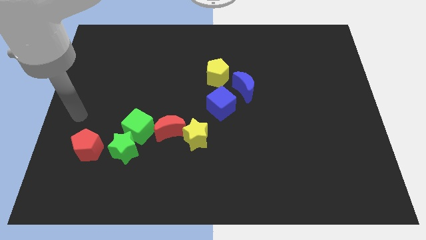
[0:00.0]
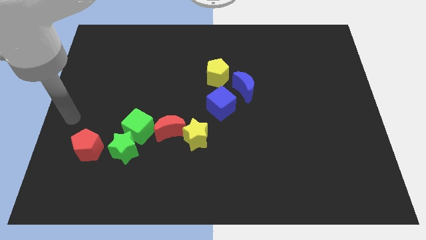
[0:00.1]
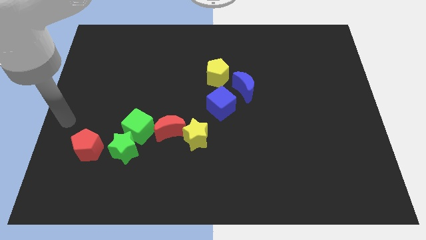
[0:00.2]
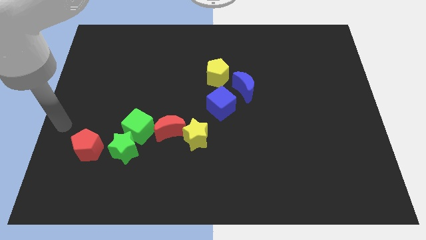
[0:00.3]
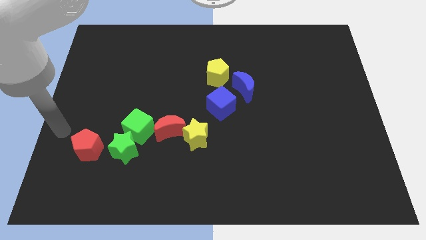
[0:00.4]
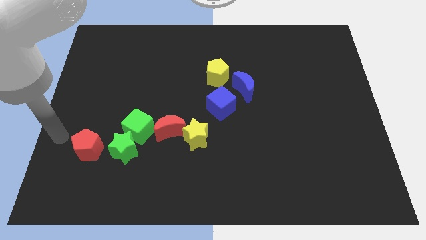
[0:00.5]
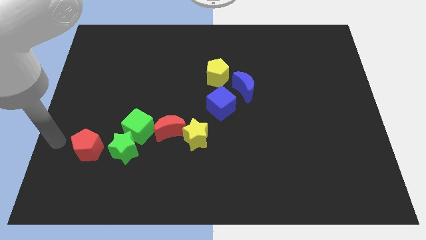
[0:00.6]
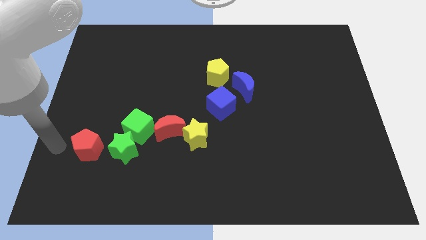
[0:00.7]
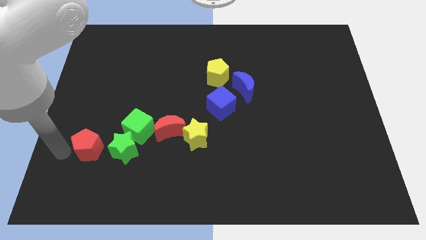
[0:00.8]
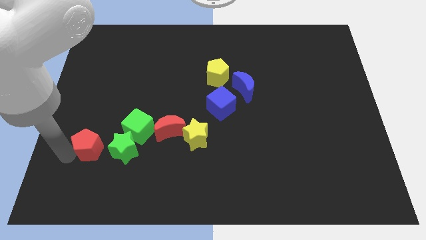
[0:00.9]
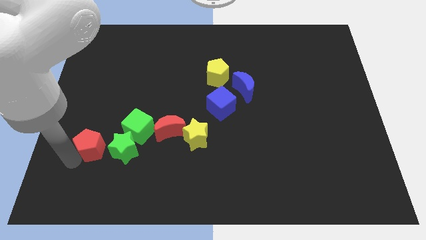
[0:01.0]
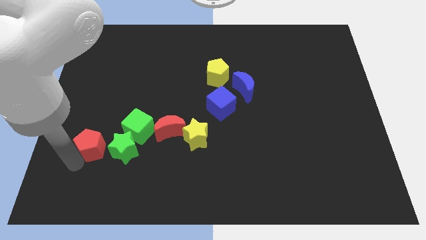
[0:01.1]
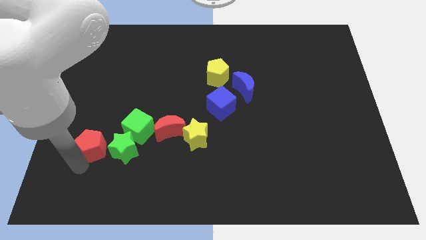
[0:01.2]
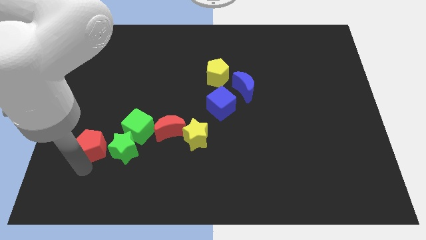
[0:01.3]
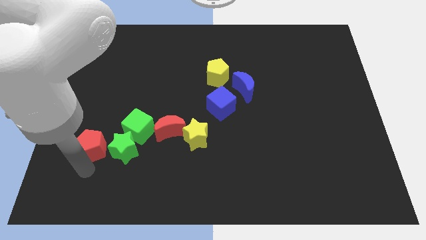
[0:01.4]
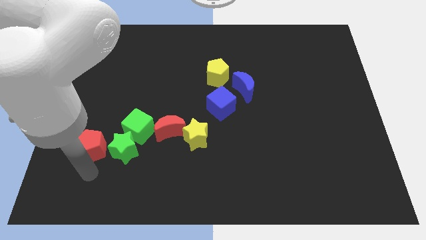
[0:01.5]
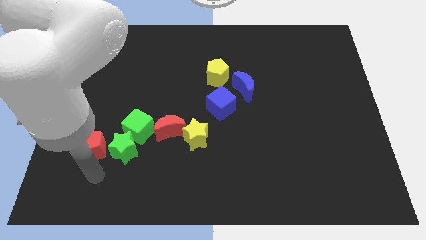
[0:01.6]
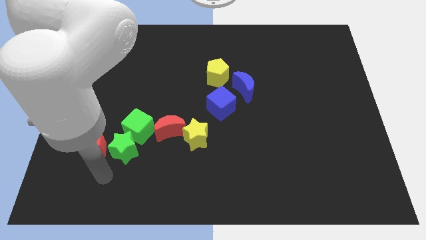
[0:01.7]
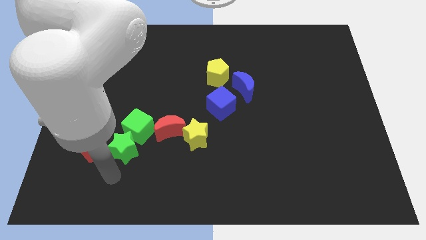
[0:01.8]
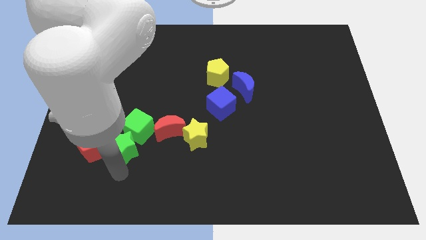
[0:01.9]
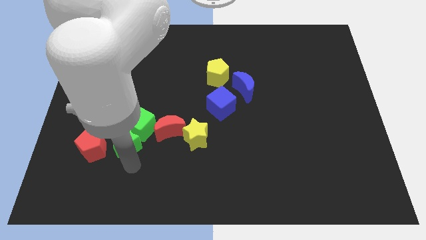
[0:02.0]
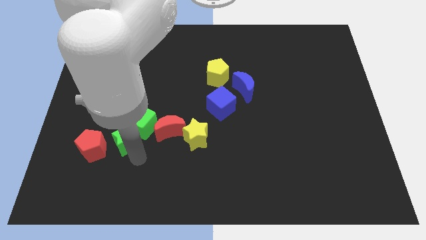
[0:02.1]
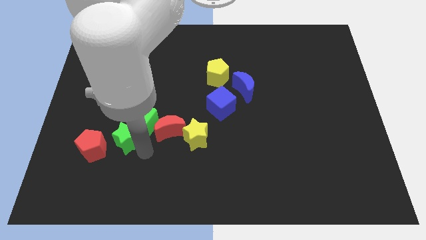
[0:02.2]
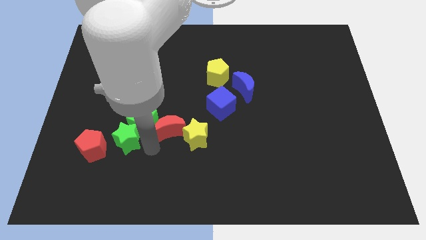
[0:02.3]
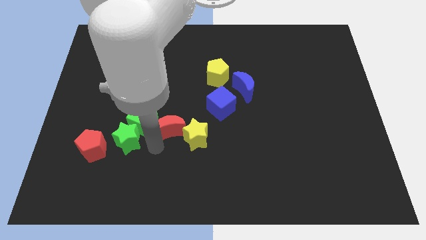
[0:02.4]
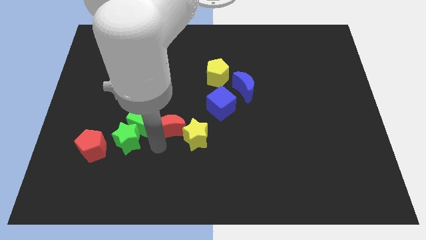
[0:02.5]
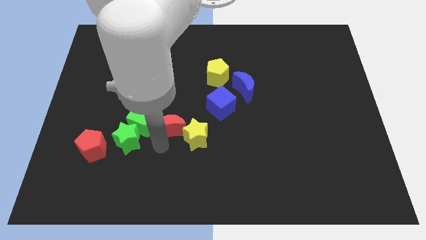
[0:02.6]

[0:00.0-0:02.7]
push the green blocks and red penatgon

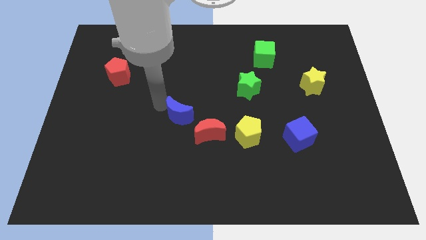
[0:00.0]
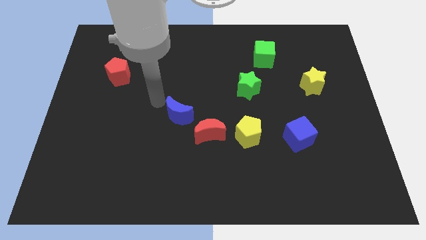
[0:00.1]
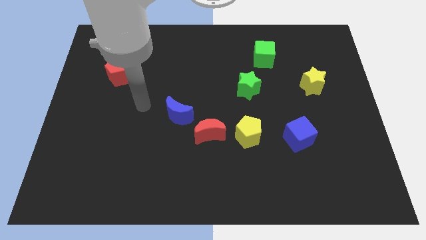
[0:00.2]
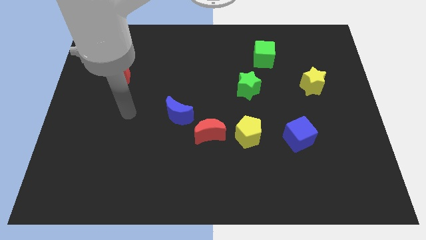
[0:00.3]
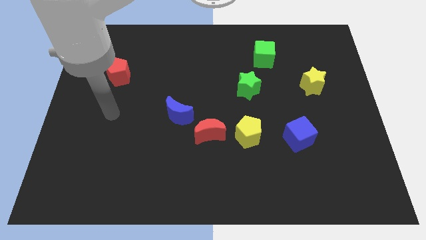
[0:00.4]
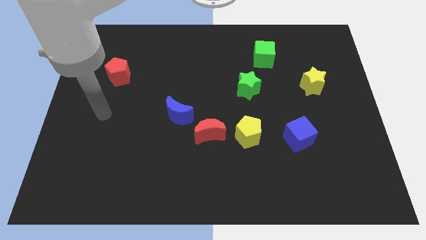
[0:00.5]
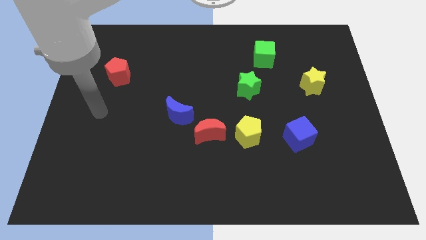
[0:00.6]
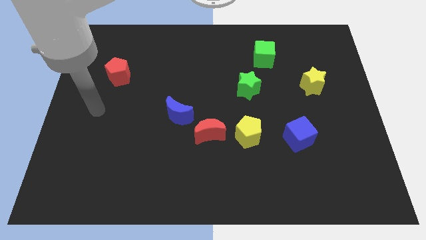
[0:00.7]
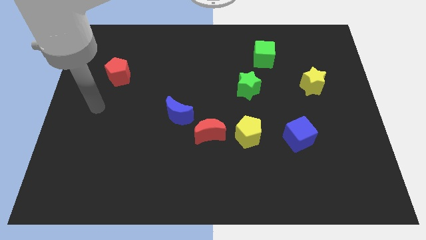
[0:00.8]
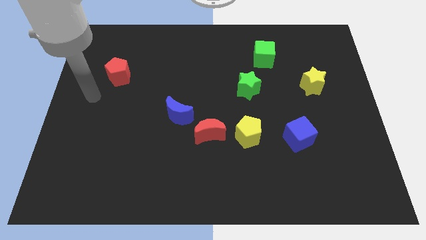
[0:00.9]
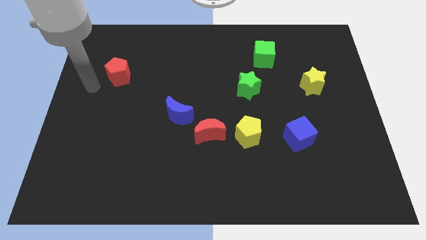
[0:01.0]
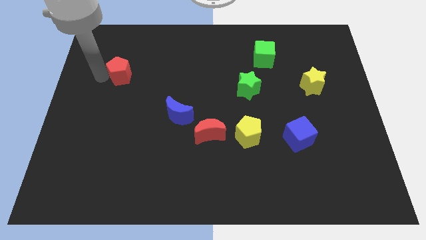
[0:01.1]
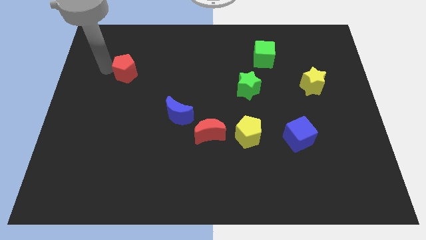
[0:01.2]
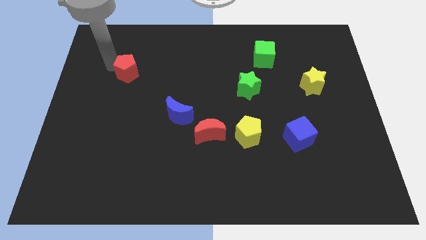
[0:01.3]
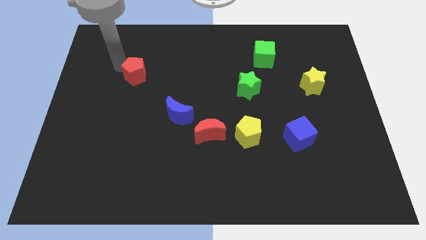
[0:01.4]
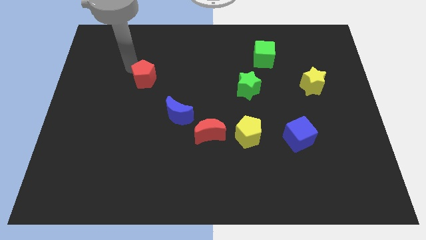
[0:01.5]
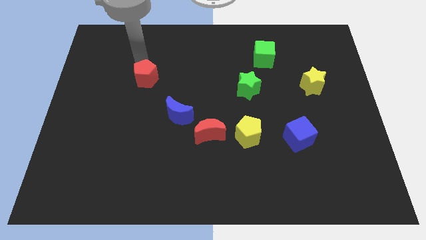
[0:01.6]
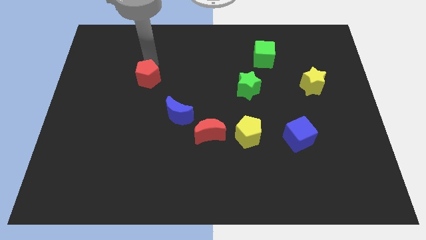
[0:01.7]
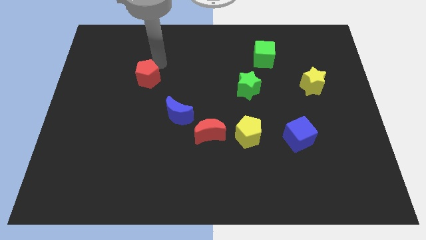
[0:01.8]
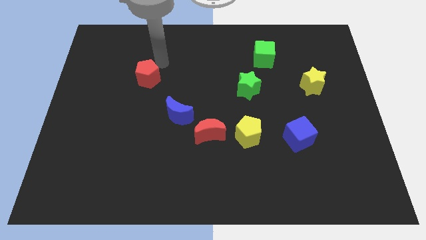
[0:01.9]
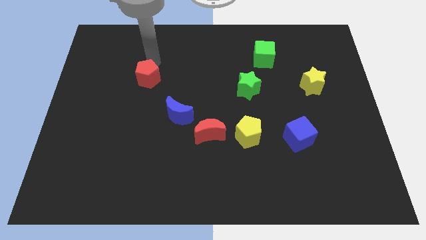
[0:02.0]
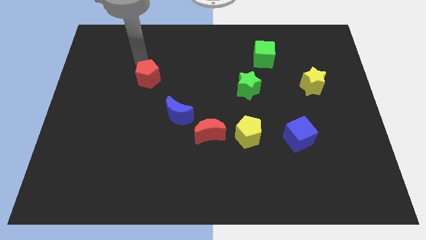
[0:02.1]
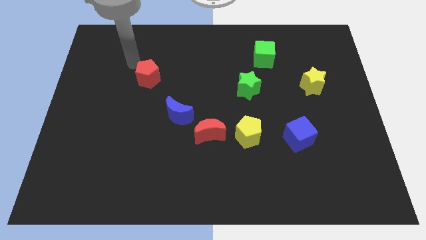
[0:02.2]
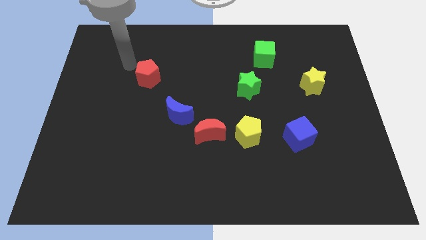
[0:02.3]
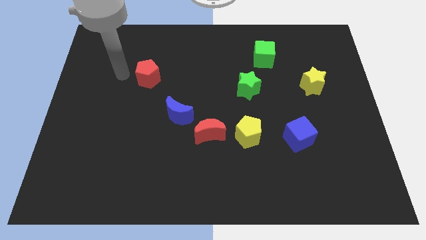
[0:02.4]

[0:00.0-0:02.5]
push the red pentagon towards the blue moon

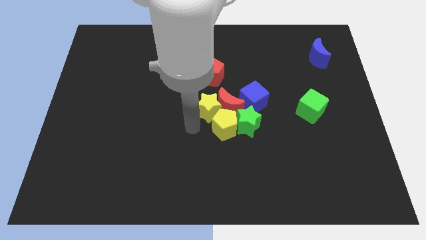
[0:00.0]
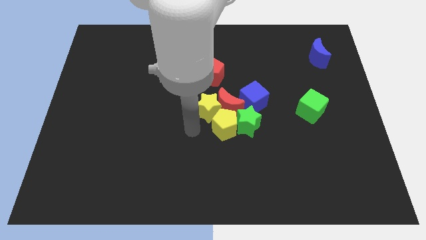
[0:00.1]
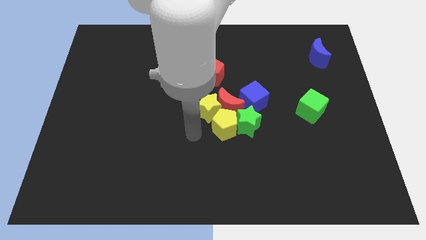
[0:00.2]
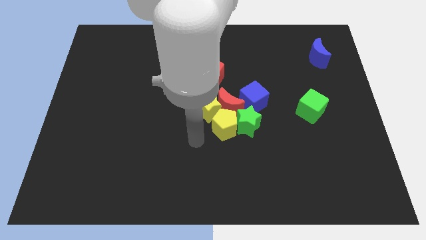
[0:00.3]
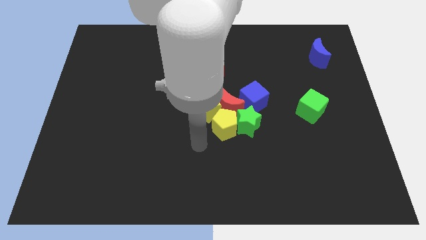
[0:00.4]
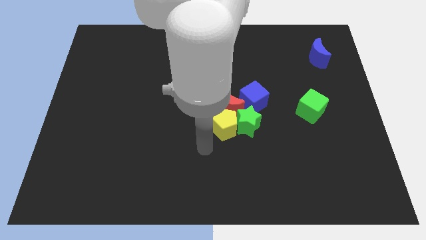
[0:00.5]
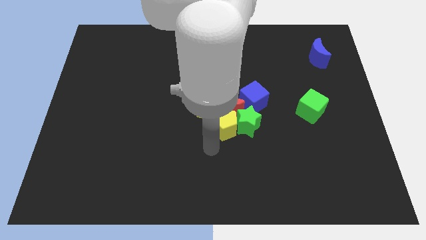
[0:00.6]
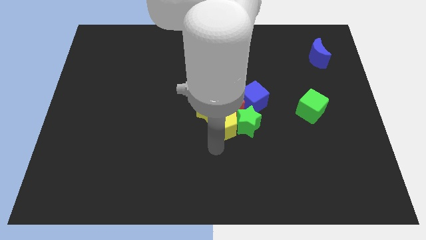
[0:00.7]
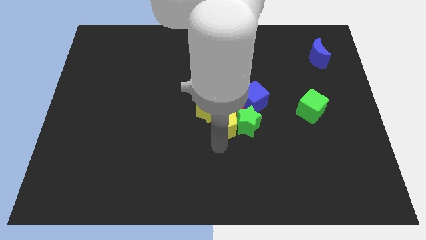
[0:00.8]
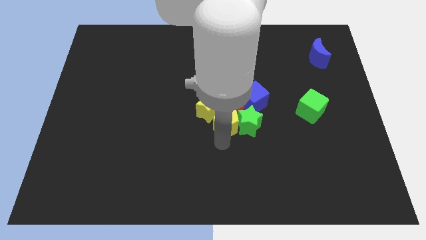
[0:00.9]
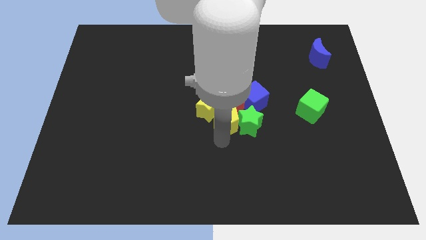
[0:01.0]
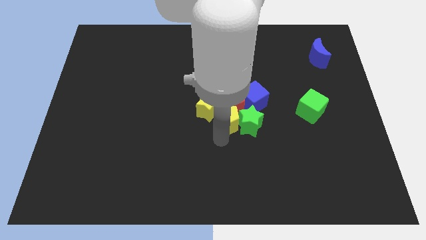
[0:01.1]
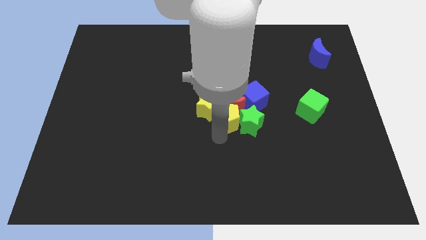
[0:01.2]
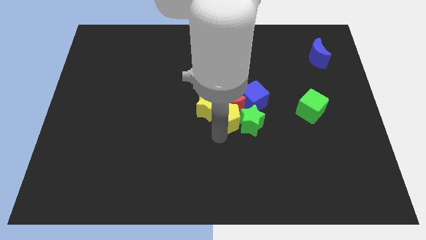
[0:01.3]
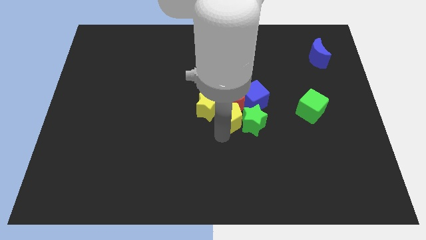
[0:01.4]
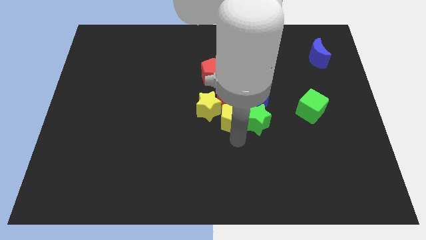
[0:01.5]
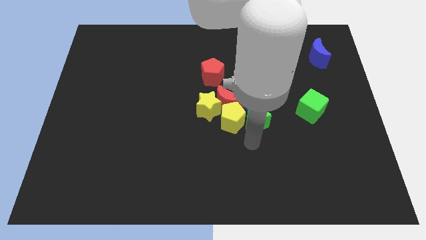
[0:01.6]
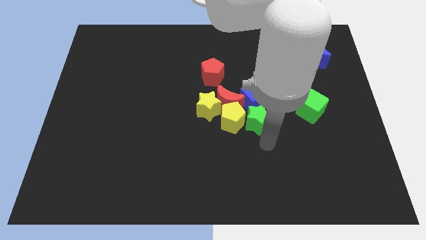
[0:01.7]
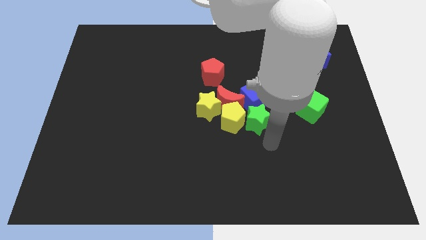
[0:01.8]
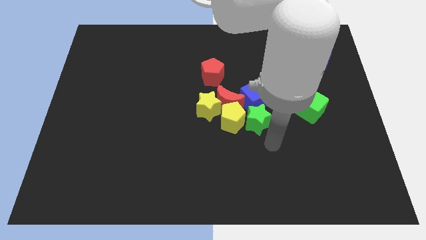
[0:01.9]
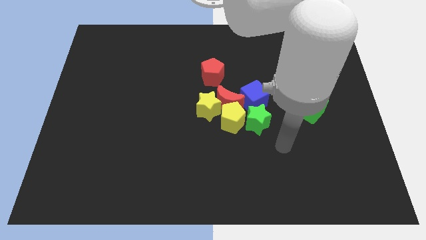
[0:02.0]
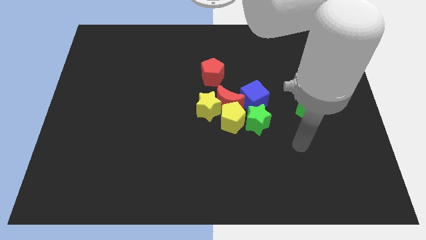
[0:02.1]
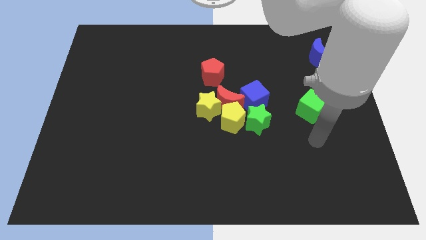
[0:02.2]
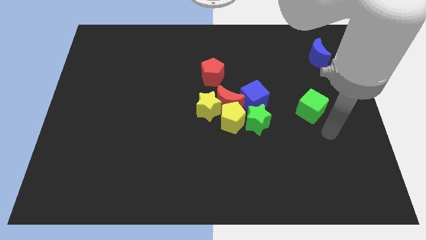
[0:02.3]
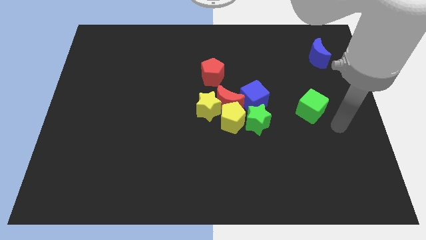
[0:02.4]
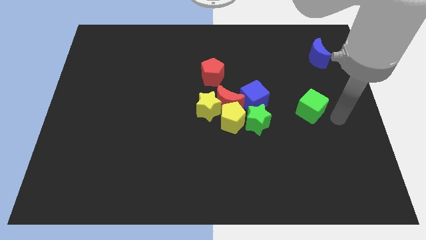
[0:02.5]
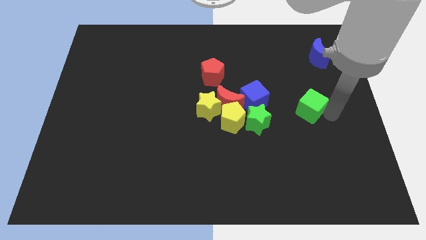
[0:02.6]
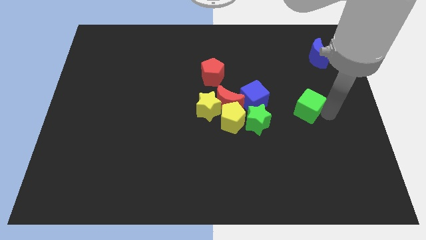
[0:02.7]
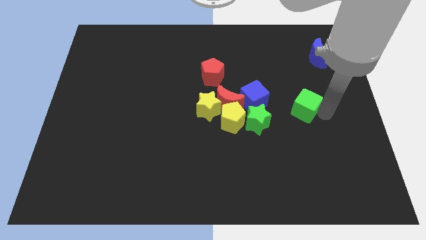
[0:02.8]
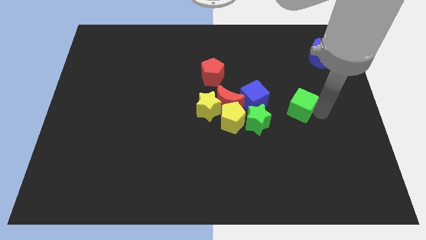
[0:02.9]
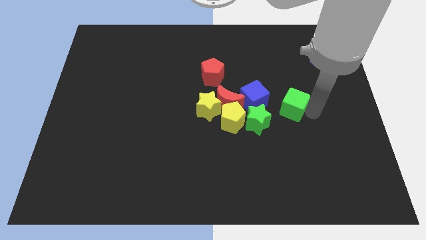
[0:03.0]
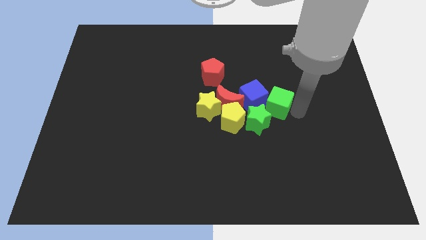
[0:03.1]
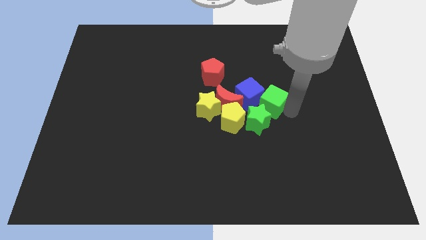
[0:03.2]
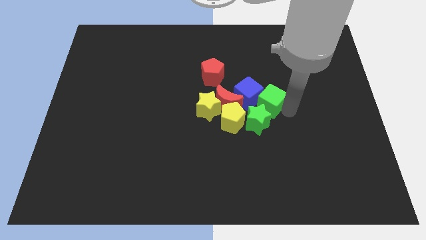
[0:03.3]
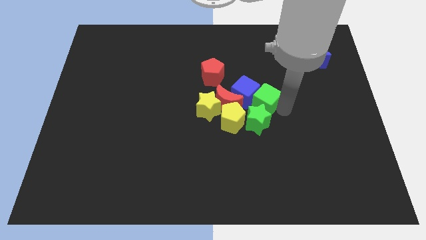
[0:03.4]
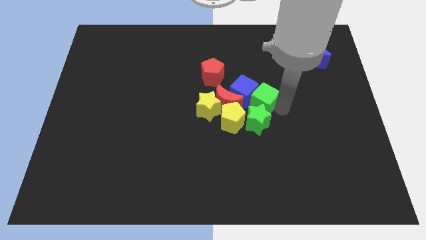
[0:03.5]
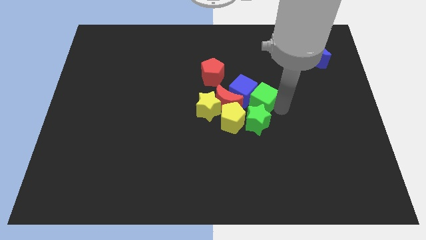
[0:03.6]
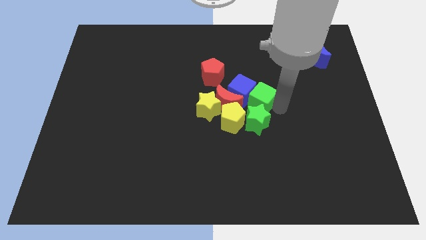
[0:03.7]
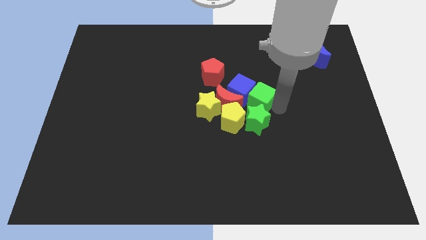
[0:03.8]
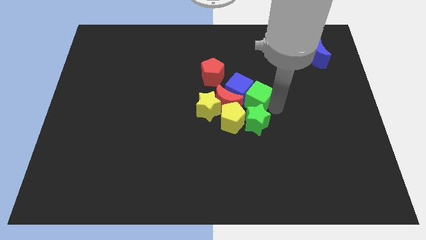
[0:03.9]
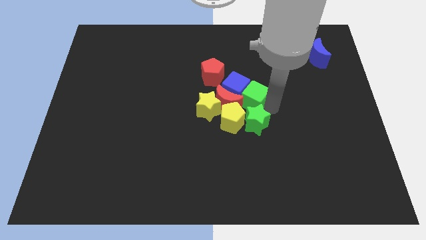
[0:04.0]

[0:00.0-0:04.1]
push the green cube to the top of the green star
